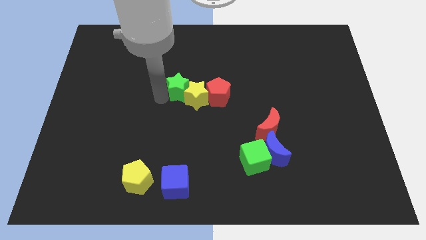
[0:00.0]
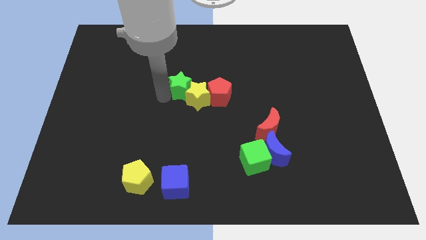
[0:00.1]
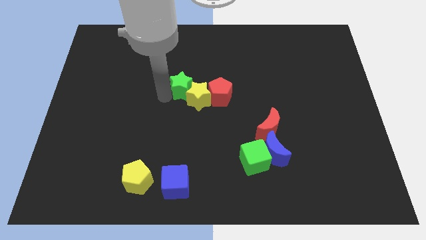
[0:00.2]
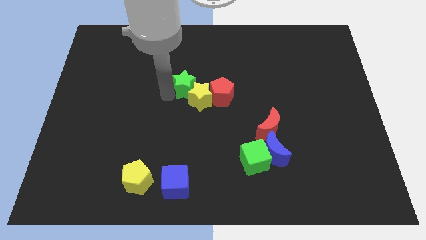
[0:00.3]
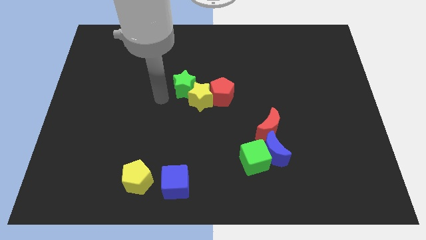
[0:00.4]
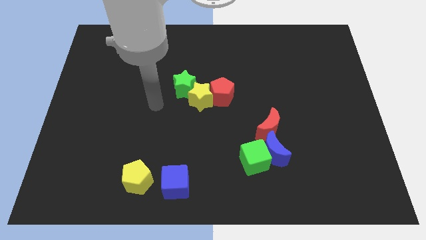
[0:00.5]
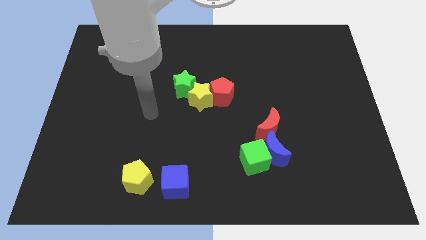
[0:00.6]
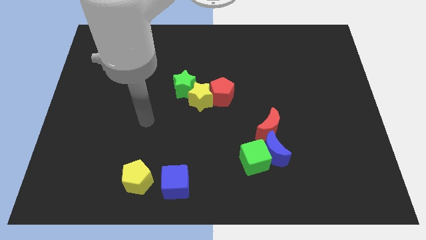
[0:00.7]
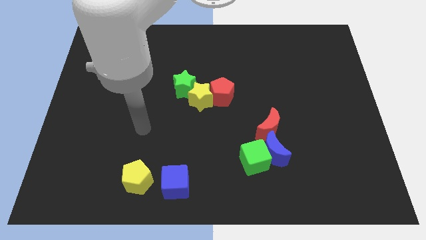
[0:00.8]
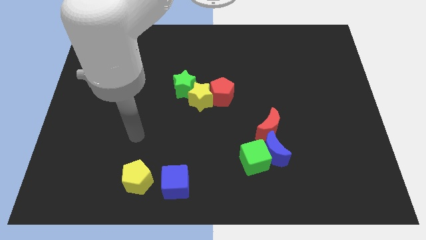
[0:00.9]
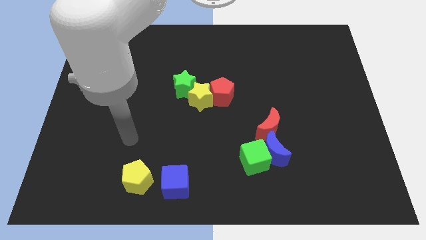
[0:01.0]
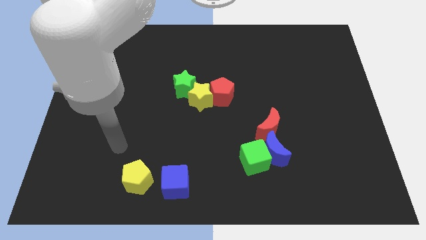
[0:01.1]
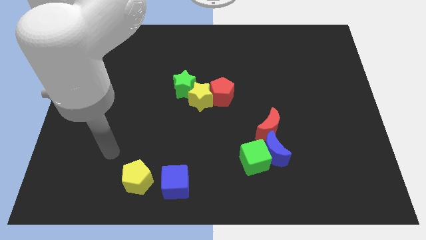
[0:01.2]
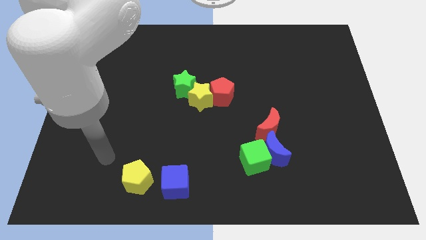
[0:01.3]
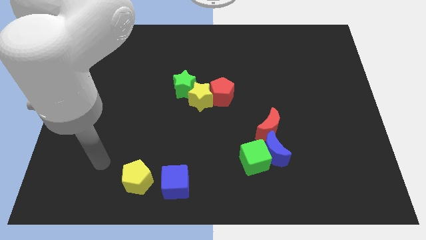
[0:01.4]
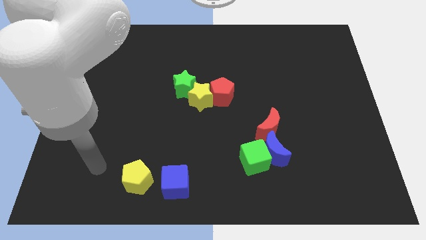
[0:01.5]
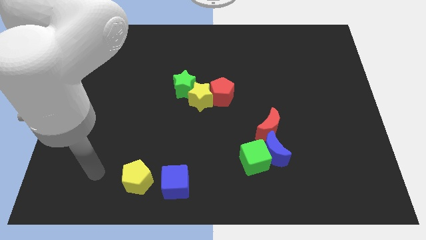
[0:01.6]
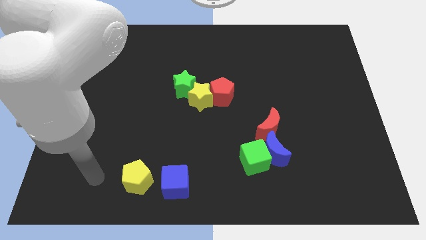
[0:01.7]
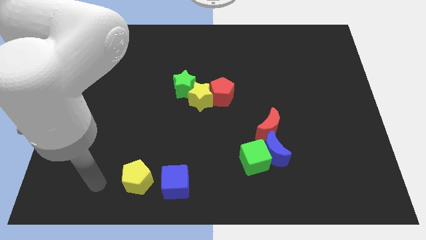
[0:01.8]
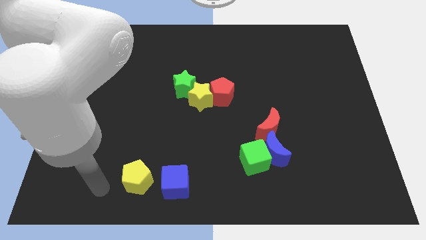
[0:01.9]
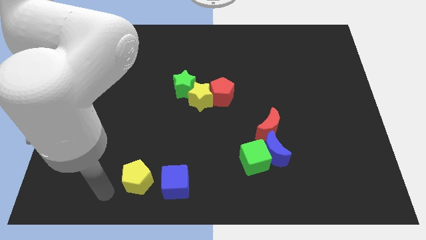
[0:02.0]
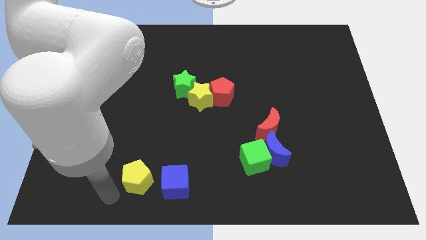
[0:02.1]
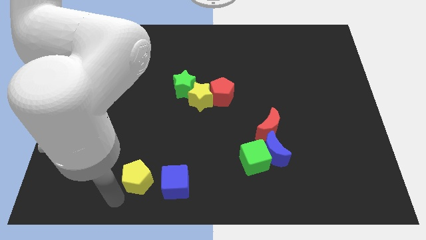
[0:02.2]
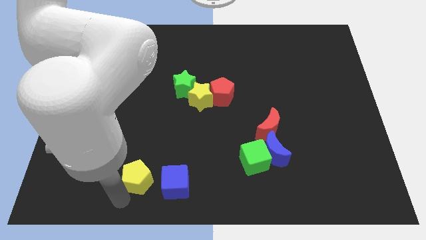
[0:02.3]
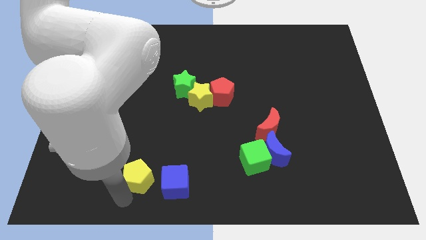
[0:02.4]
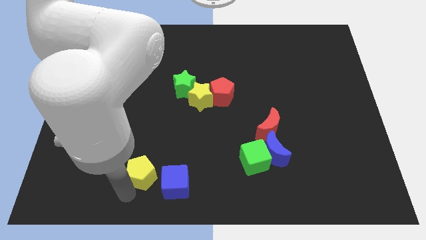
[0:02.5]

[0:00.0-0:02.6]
move the arm around the yellow pentagon

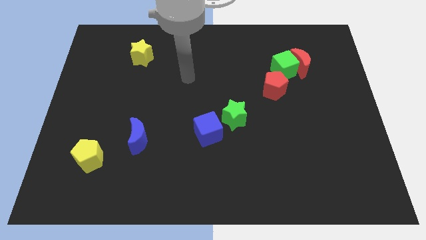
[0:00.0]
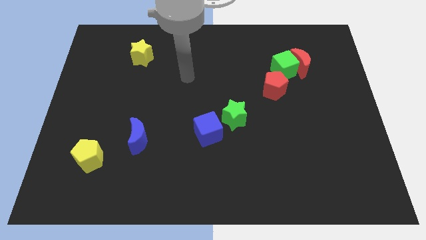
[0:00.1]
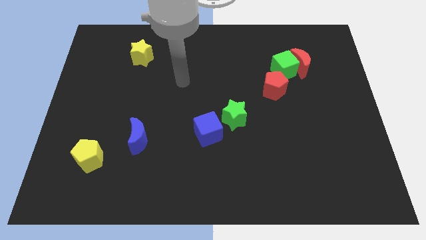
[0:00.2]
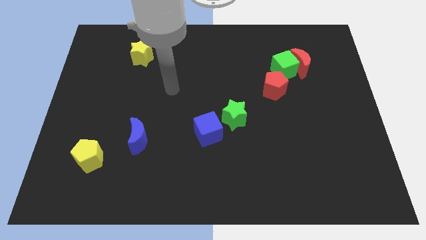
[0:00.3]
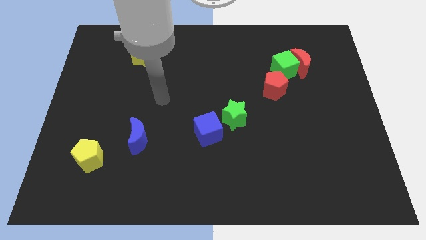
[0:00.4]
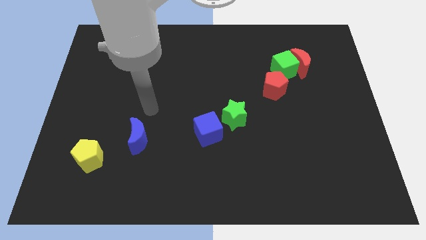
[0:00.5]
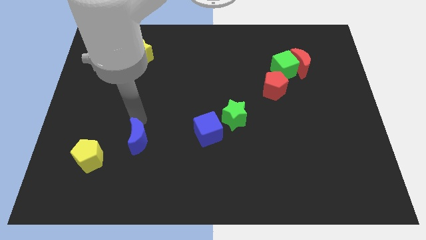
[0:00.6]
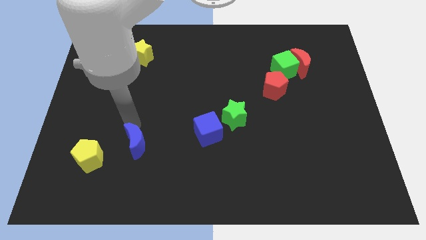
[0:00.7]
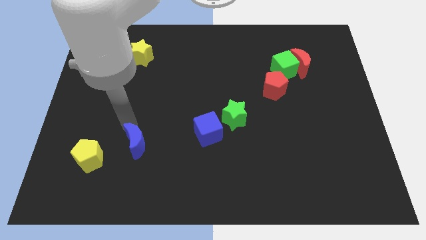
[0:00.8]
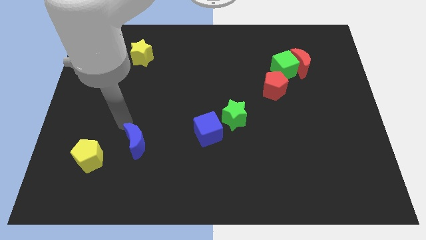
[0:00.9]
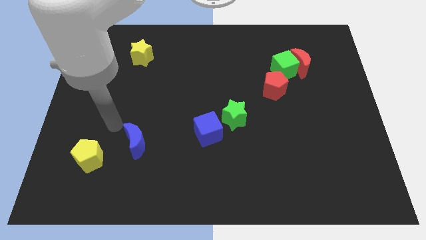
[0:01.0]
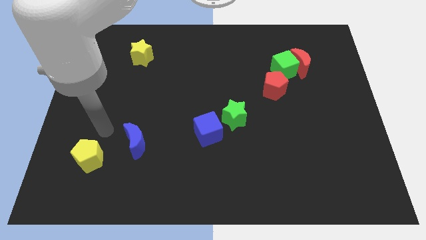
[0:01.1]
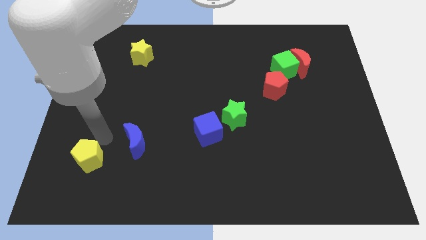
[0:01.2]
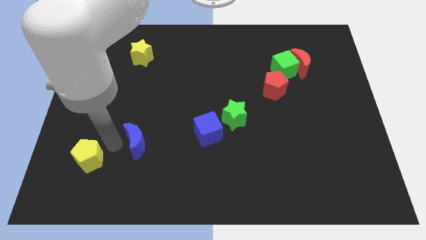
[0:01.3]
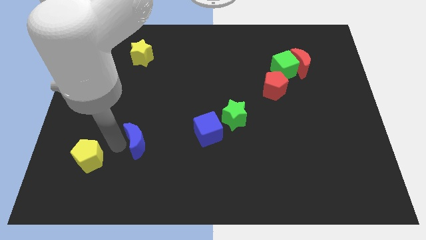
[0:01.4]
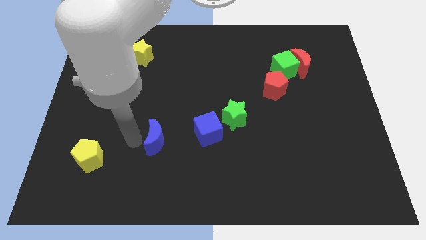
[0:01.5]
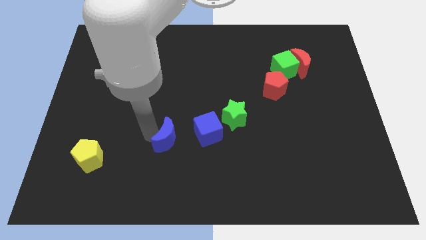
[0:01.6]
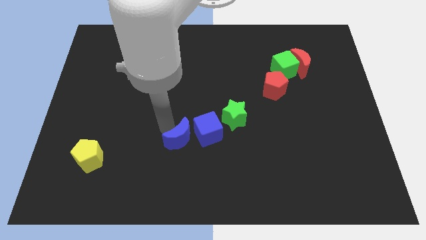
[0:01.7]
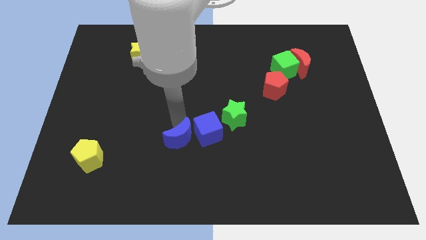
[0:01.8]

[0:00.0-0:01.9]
place blue moon to the left of blue cube

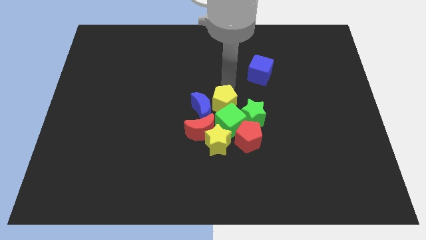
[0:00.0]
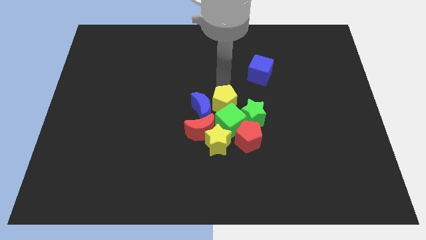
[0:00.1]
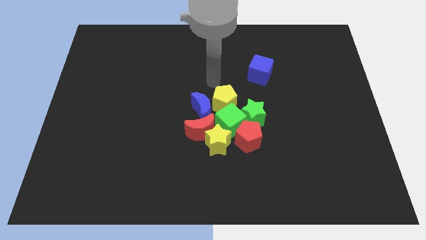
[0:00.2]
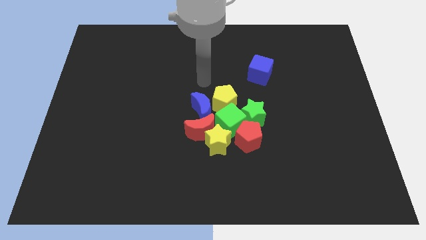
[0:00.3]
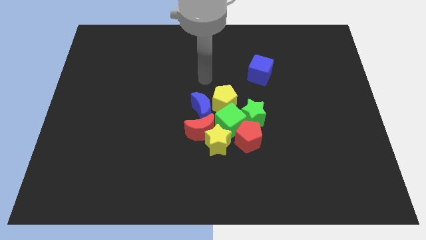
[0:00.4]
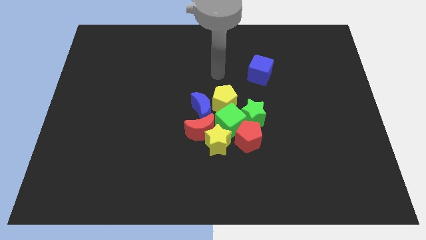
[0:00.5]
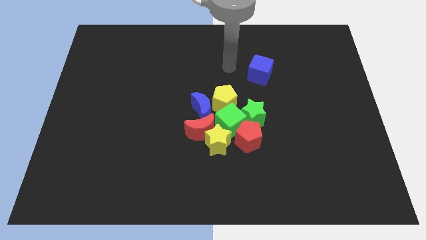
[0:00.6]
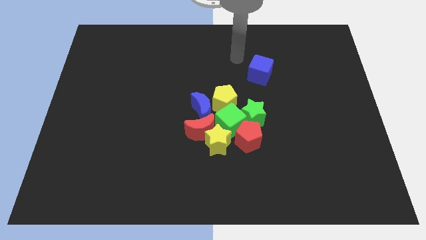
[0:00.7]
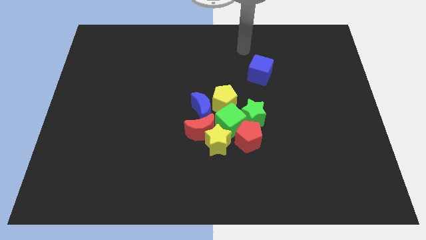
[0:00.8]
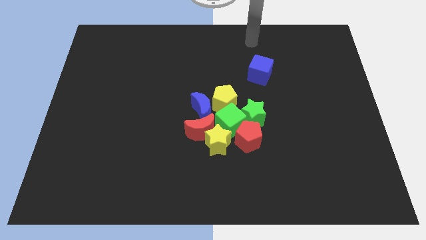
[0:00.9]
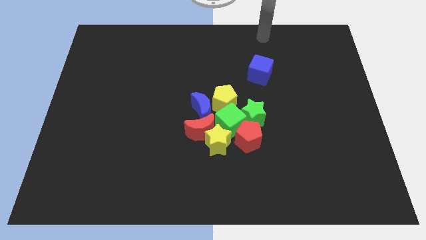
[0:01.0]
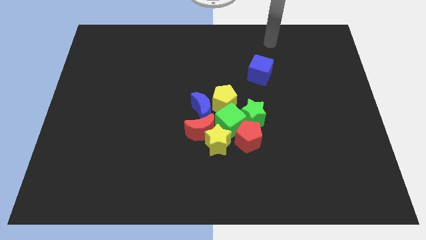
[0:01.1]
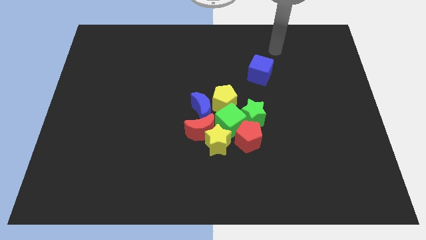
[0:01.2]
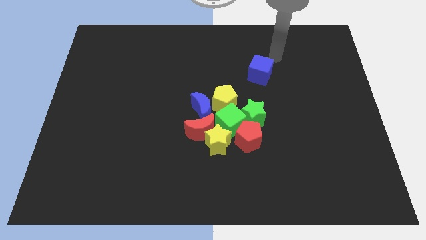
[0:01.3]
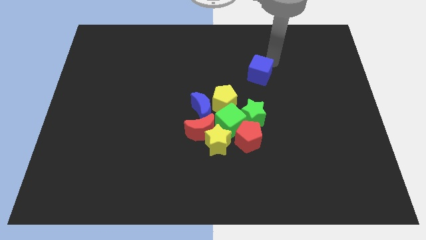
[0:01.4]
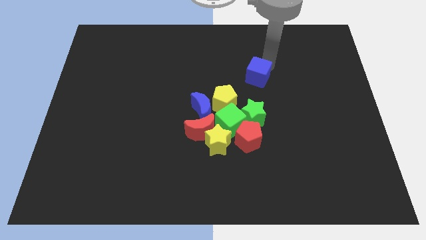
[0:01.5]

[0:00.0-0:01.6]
move the arm to the top of the blue cube

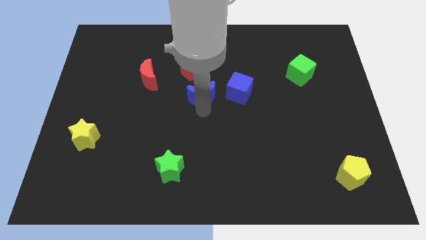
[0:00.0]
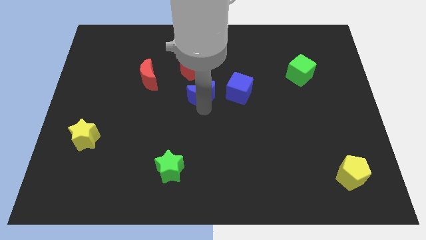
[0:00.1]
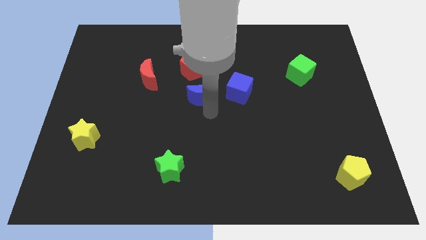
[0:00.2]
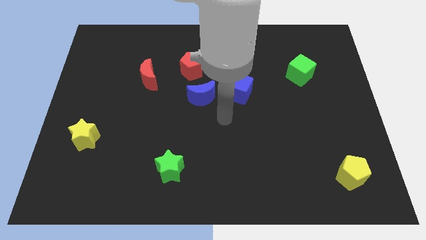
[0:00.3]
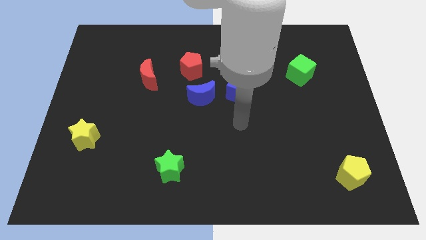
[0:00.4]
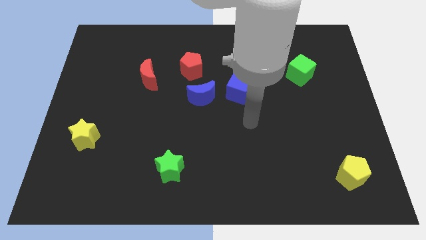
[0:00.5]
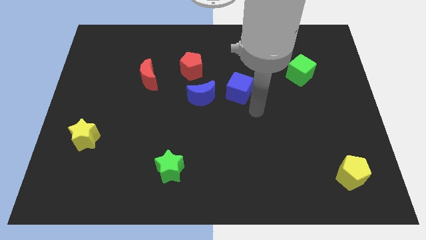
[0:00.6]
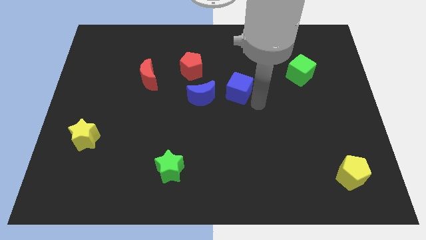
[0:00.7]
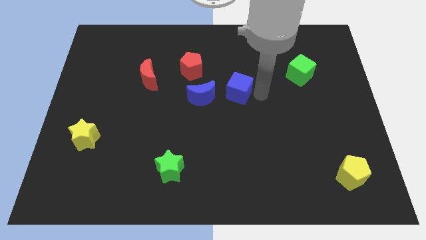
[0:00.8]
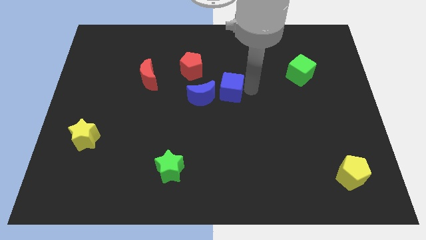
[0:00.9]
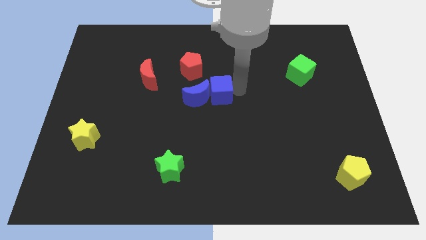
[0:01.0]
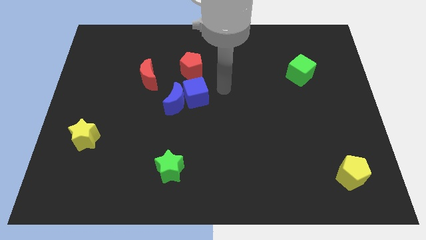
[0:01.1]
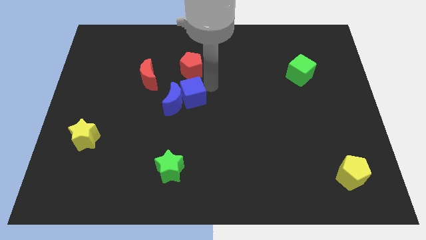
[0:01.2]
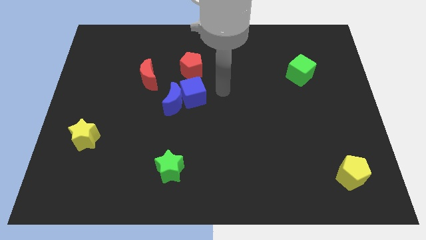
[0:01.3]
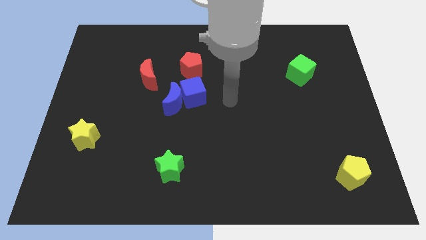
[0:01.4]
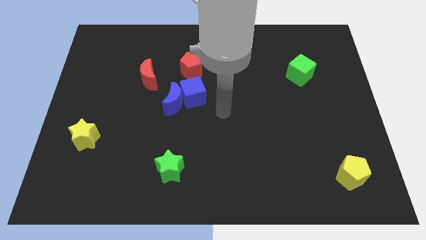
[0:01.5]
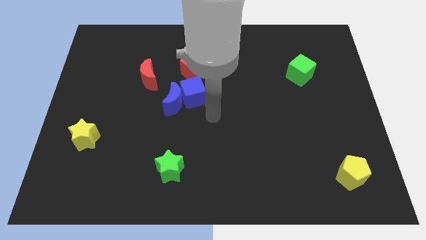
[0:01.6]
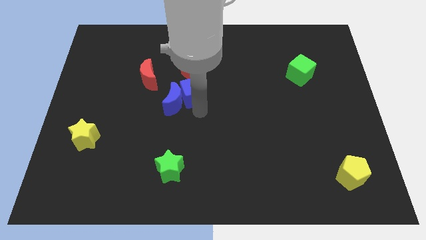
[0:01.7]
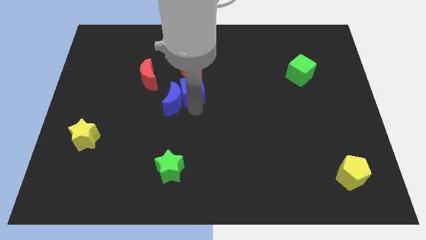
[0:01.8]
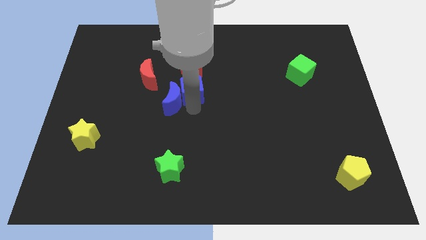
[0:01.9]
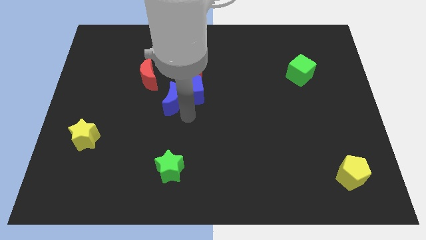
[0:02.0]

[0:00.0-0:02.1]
push blue cube into blue moon

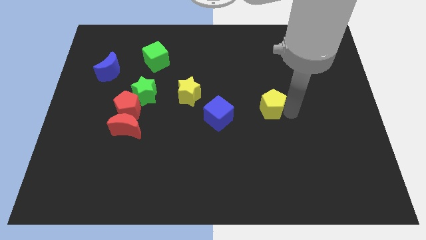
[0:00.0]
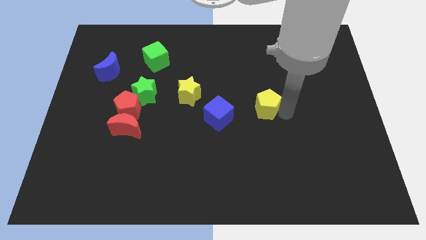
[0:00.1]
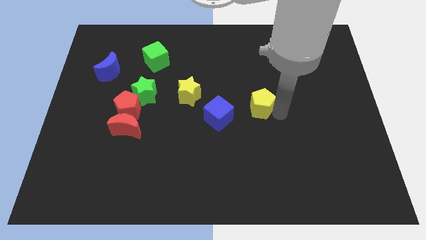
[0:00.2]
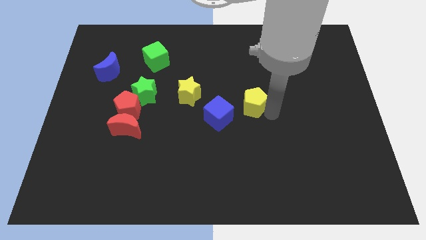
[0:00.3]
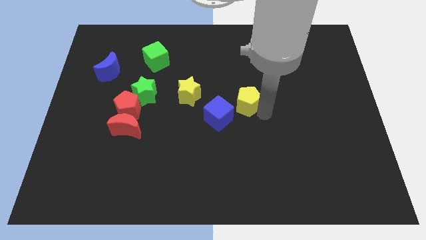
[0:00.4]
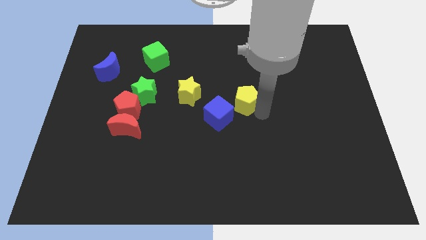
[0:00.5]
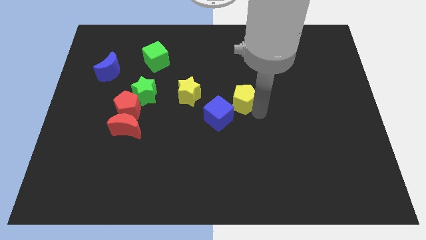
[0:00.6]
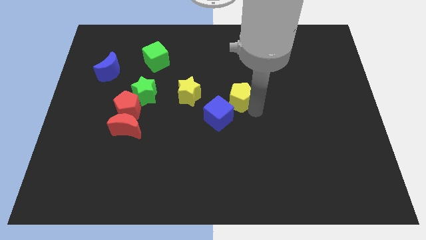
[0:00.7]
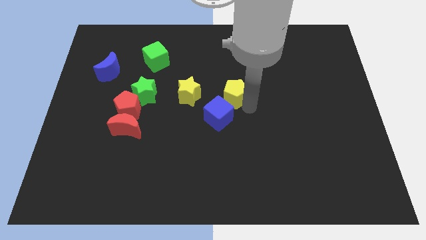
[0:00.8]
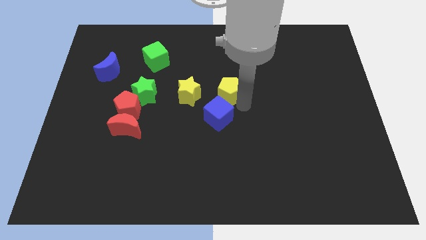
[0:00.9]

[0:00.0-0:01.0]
slide the yellow pentagon to the left
